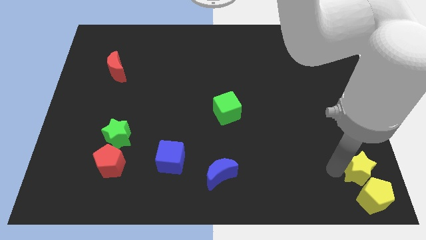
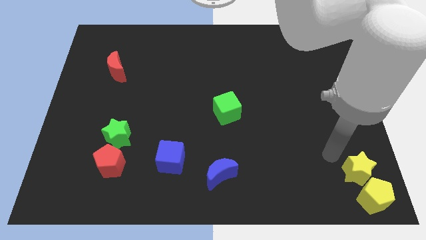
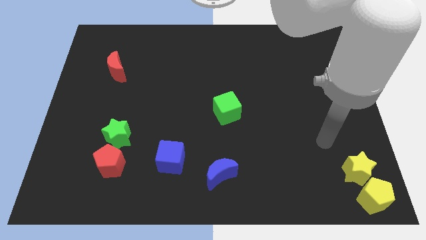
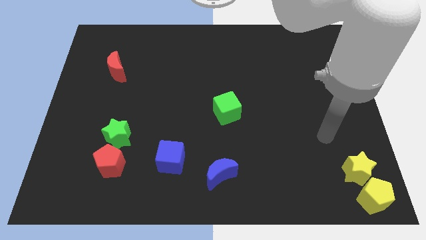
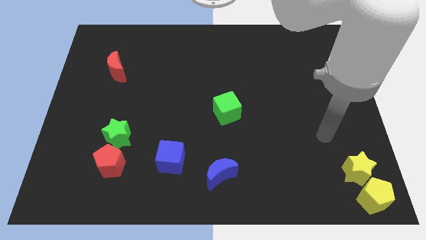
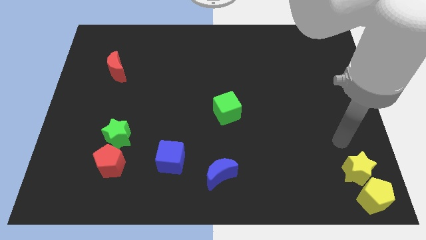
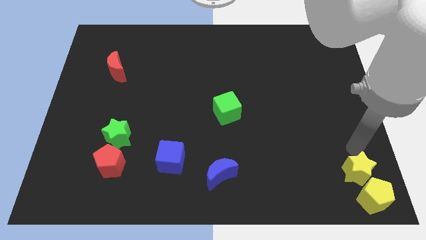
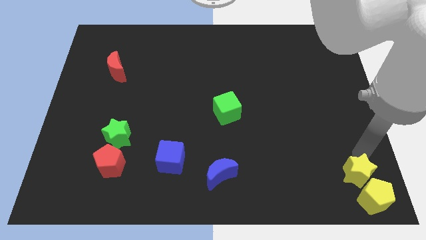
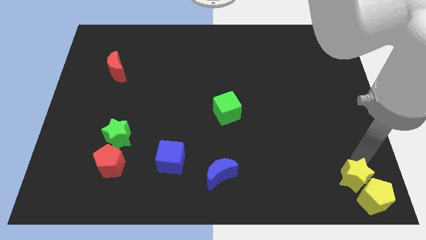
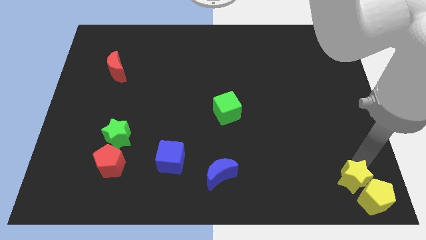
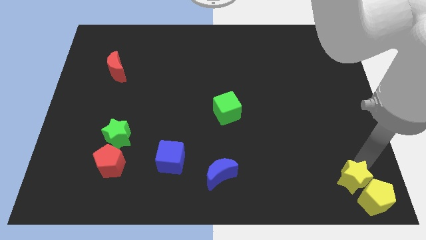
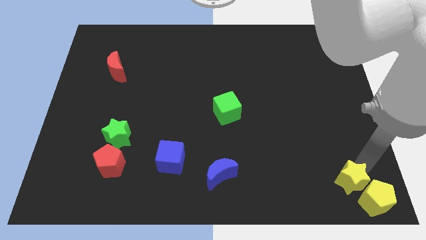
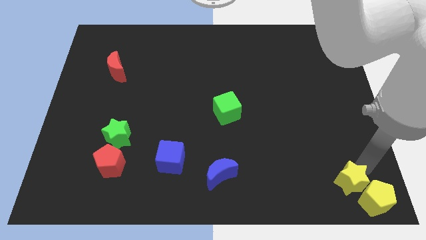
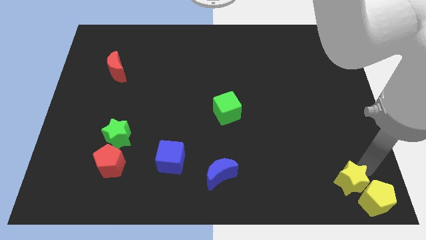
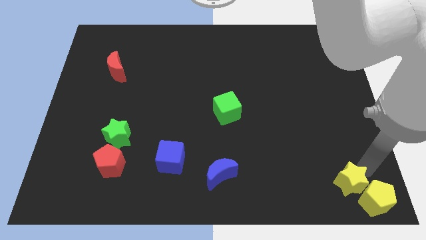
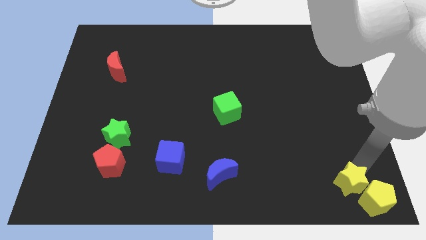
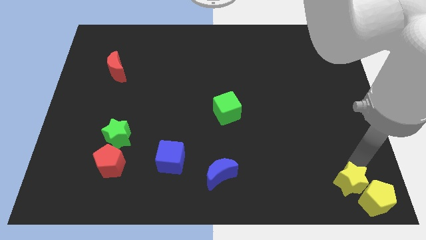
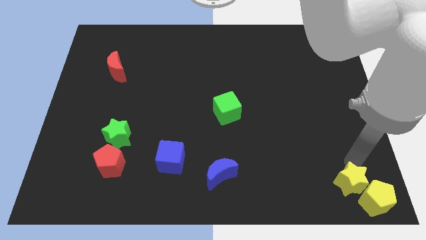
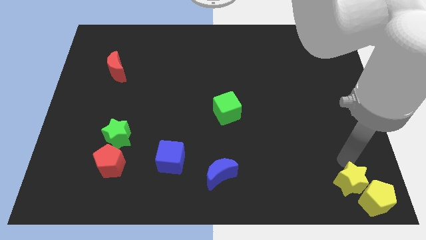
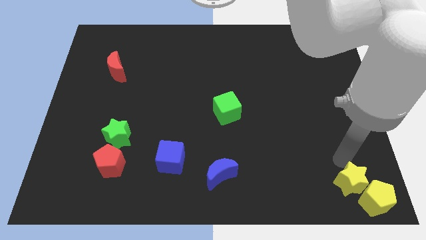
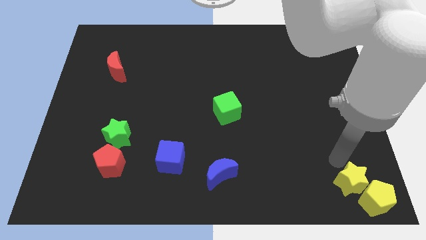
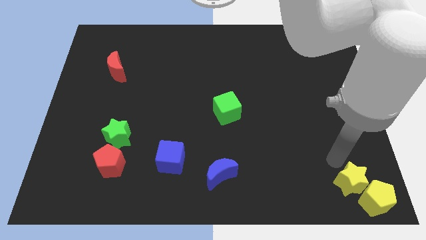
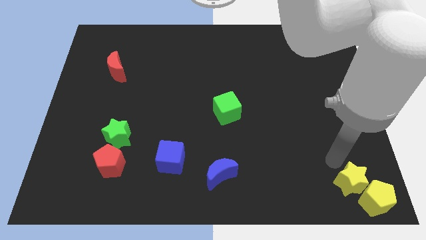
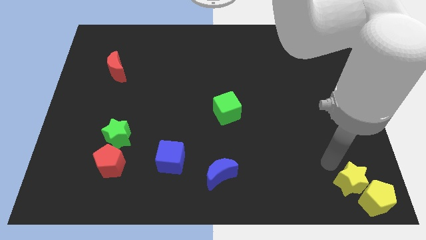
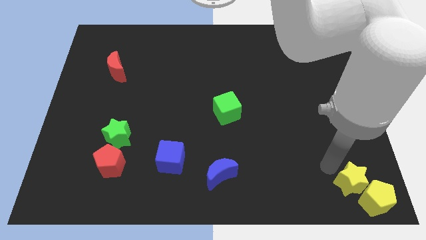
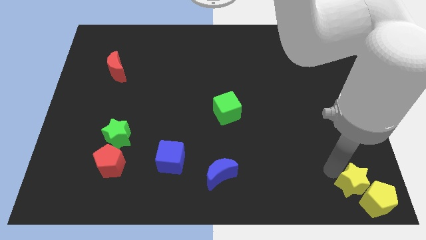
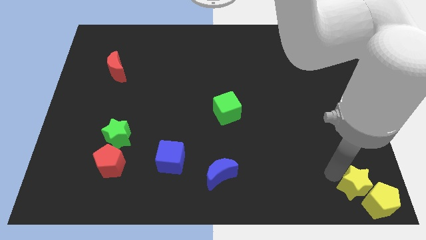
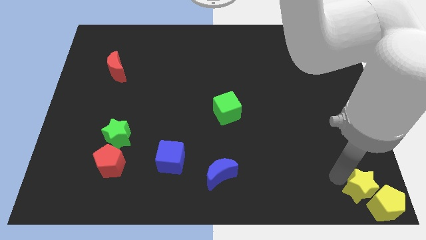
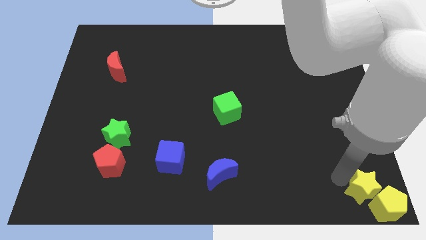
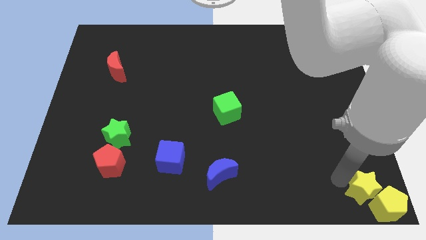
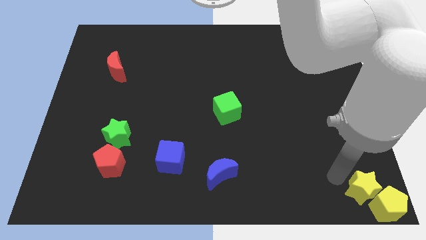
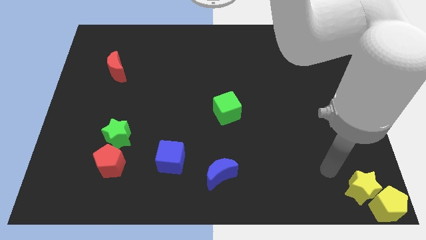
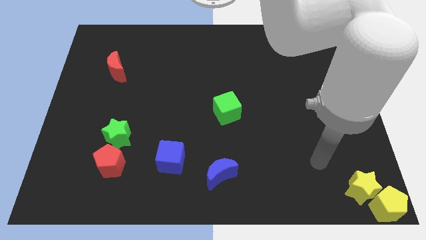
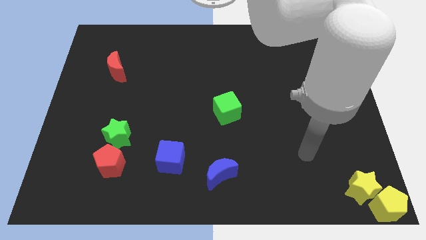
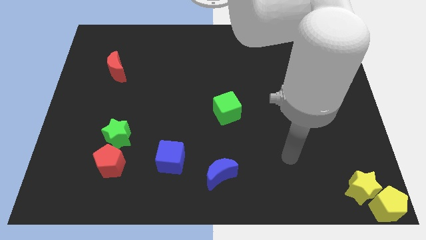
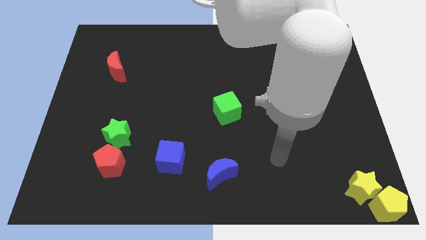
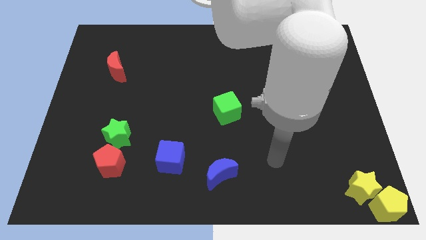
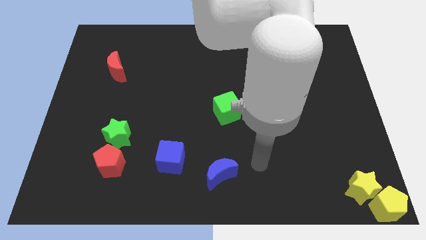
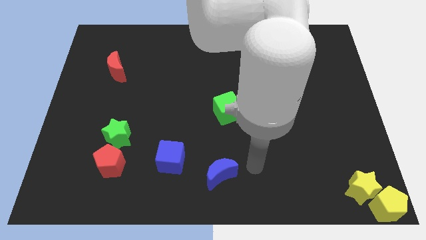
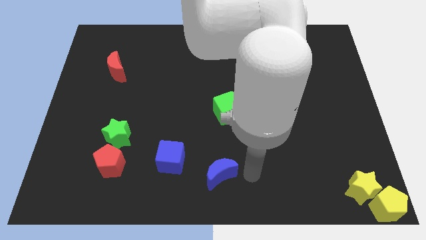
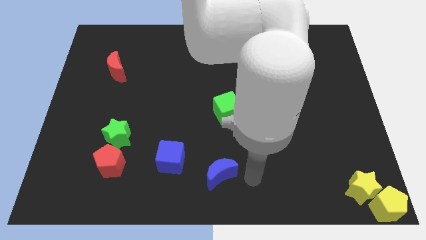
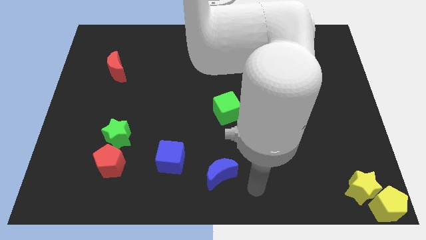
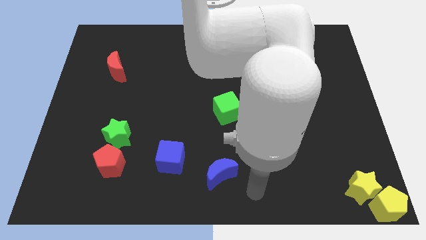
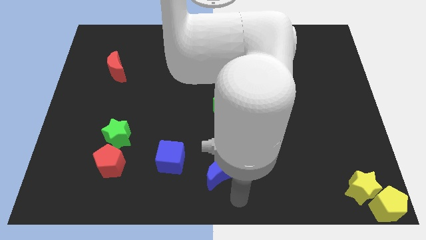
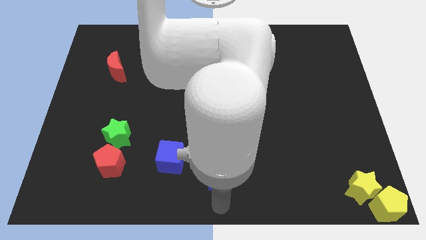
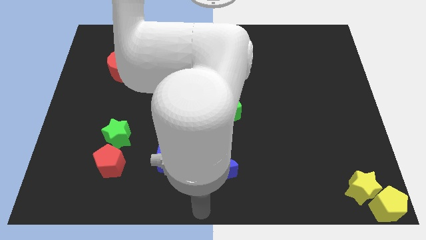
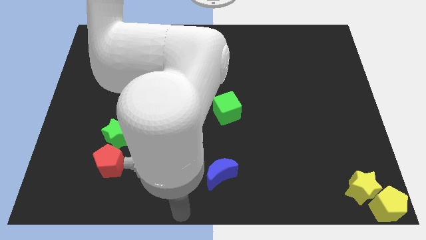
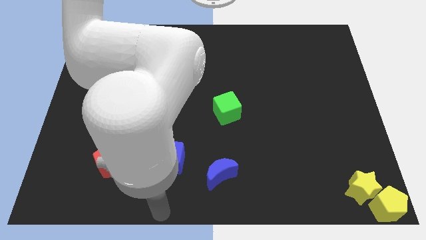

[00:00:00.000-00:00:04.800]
push the yellow pentagon and yellow star to the bottom right side

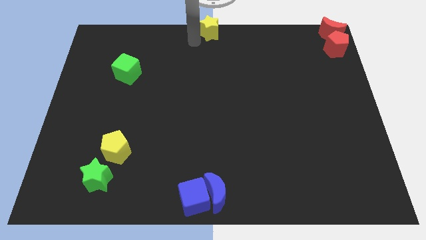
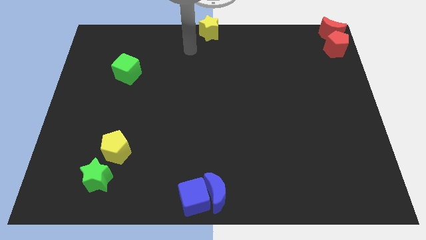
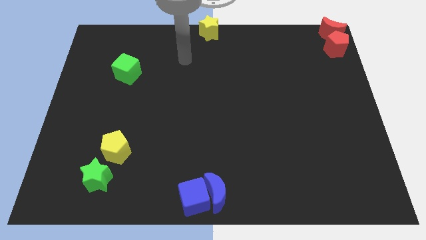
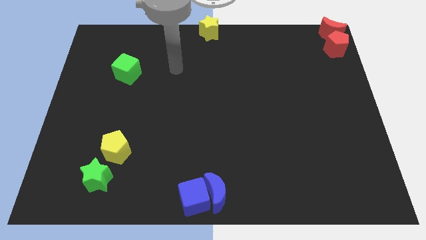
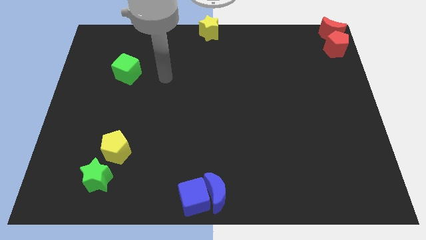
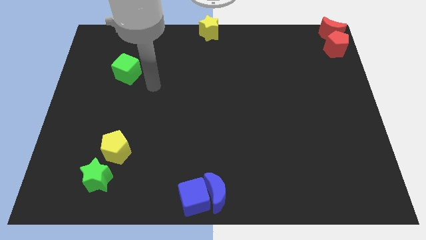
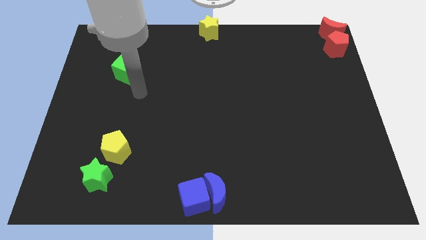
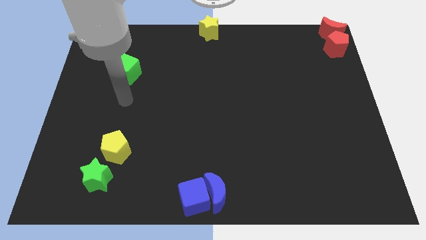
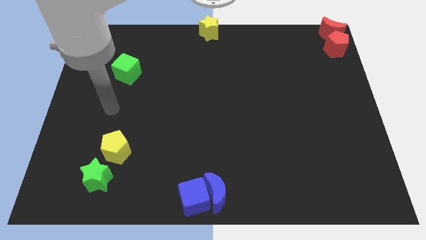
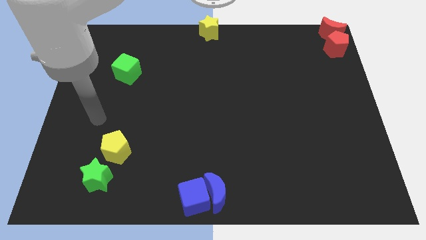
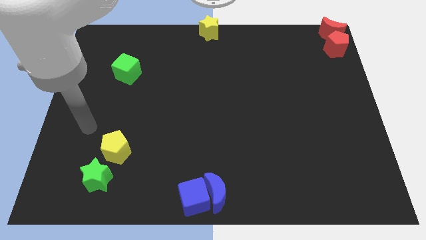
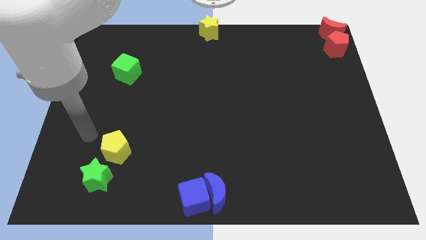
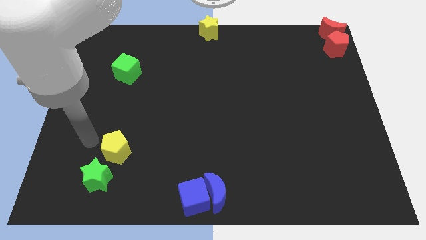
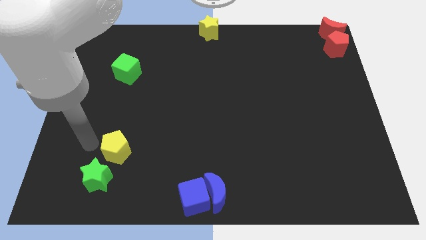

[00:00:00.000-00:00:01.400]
point your arm left to yellow pentagon

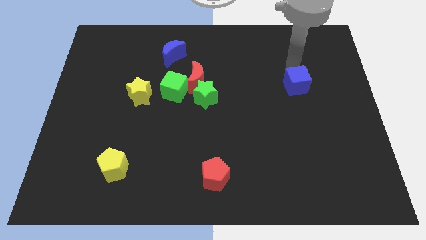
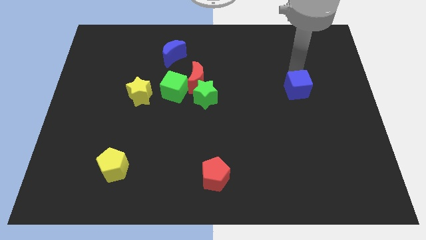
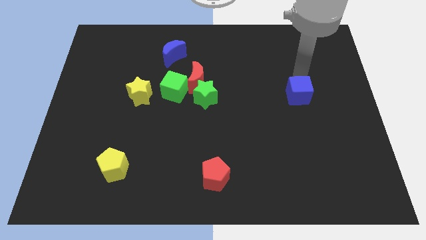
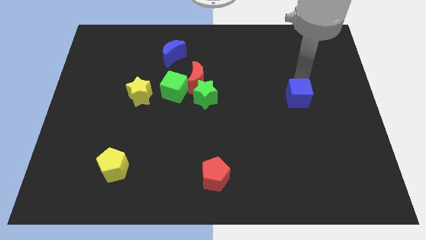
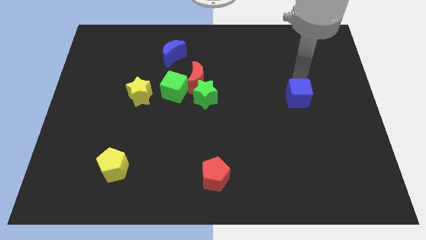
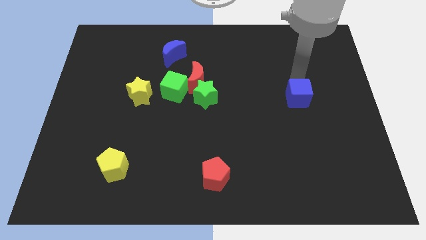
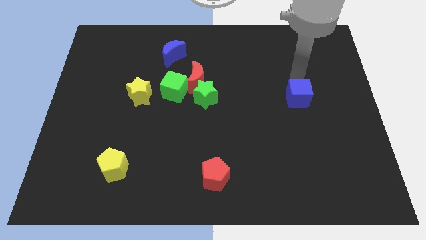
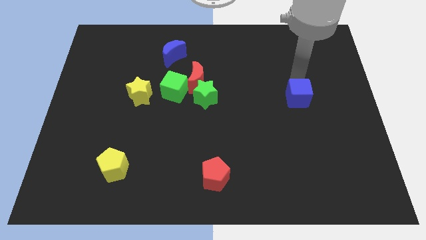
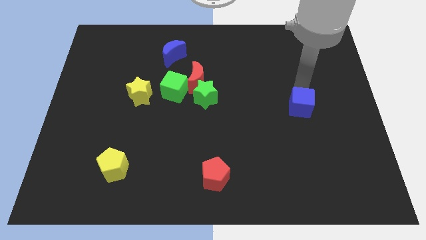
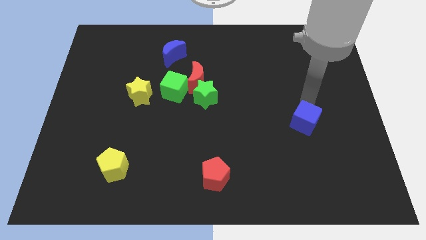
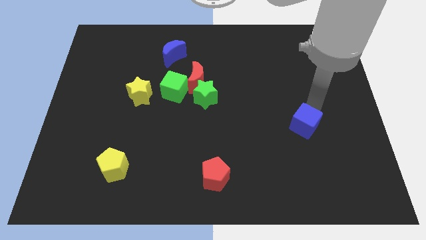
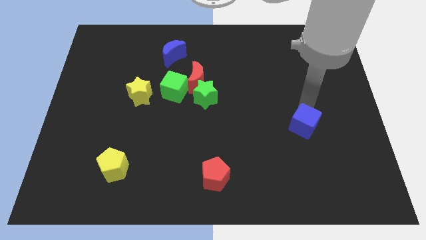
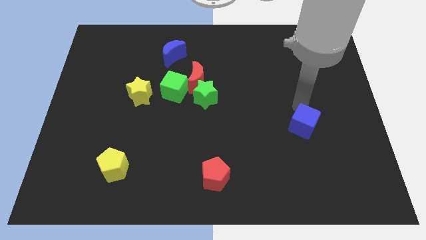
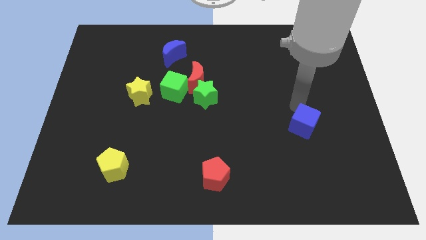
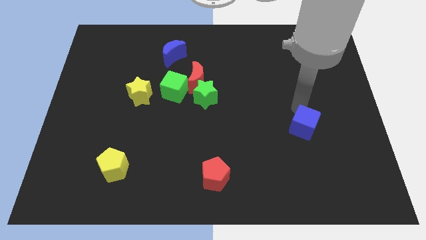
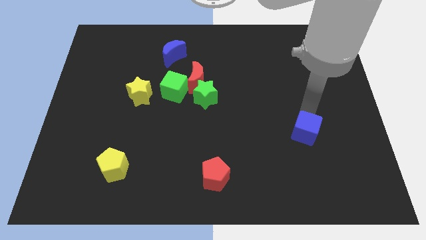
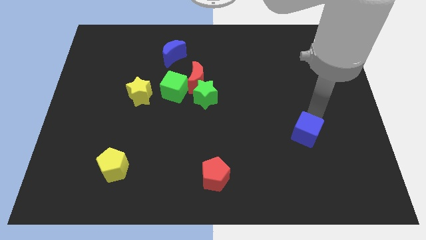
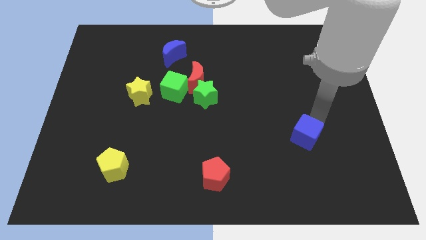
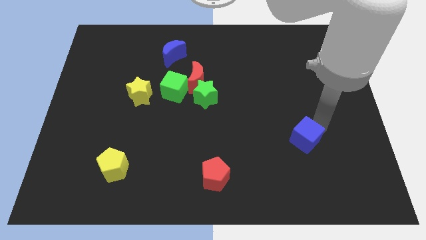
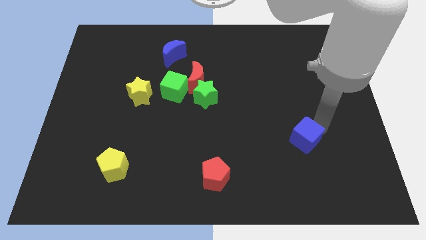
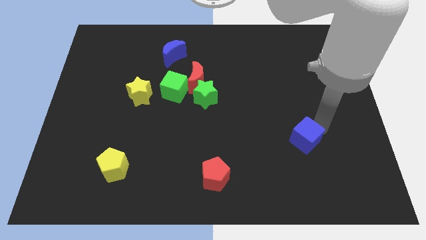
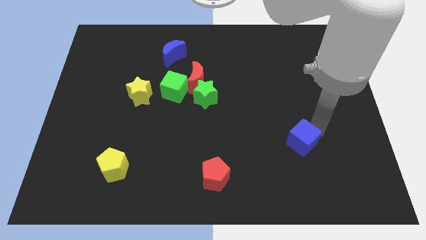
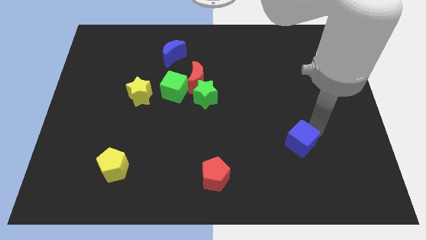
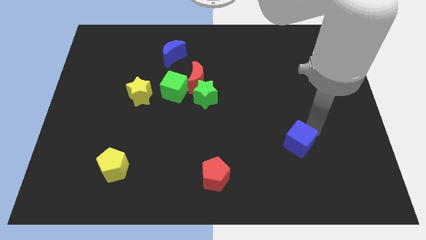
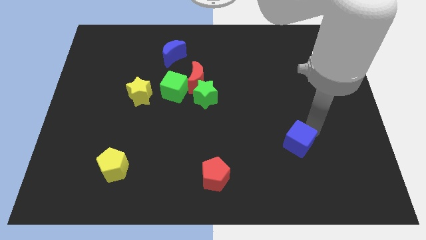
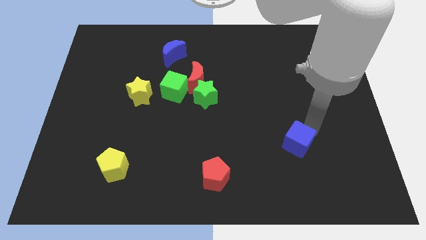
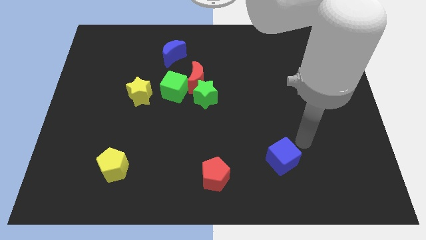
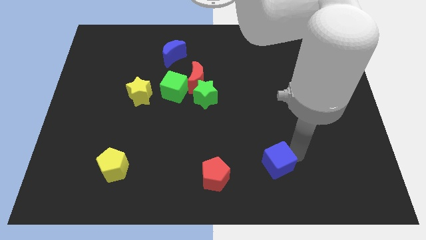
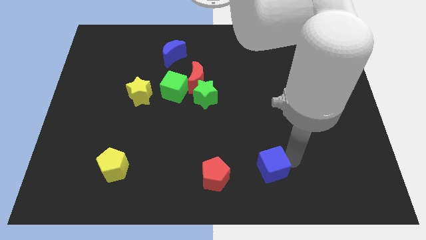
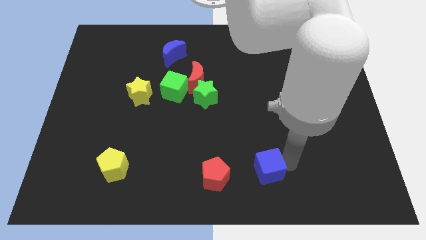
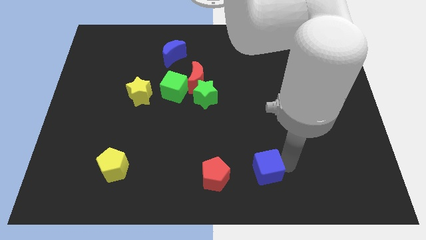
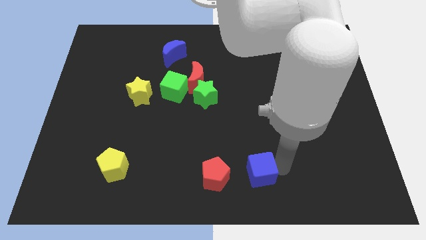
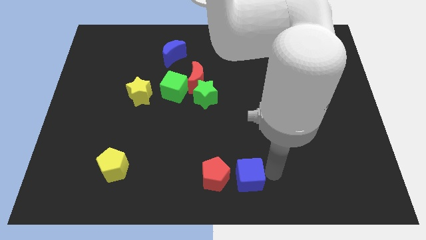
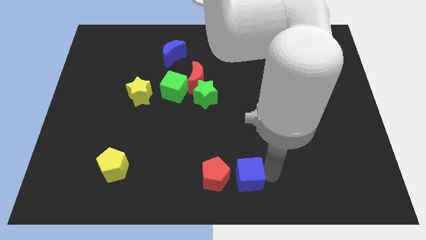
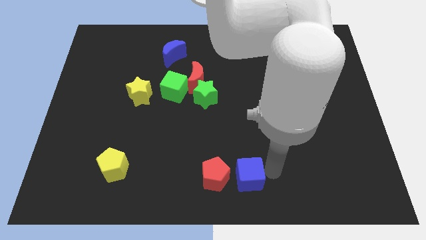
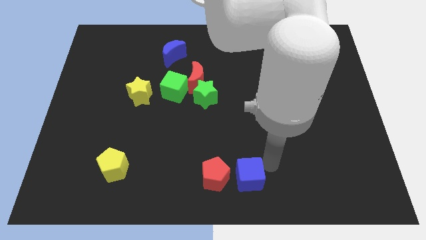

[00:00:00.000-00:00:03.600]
move the blue cube right to the red pentagon
